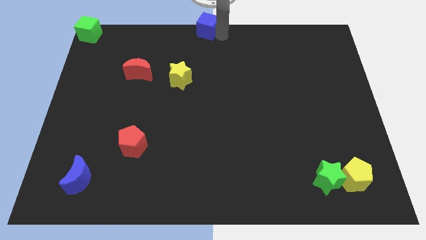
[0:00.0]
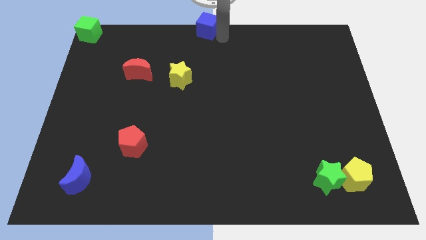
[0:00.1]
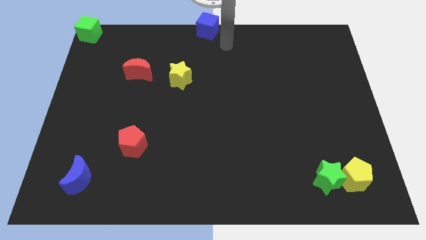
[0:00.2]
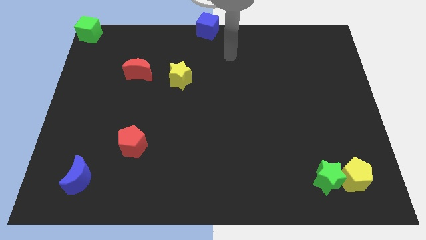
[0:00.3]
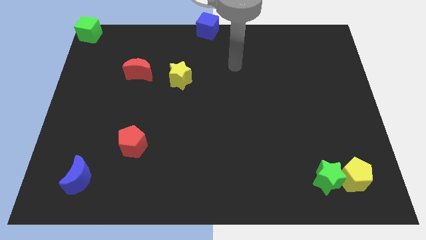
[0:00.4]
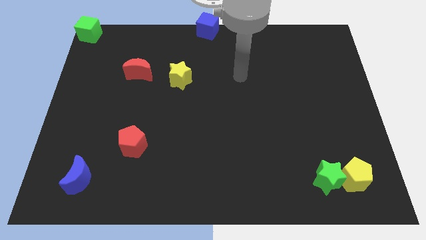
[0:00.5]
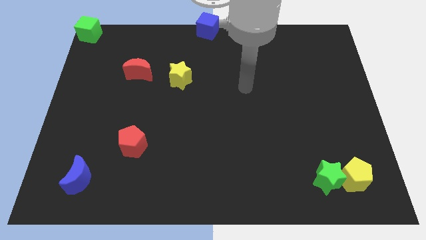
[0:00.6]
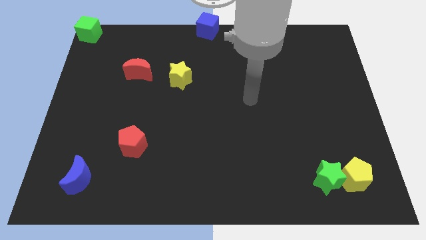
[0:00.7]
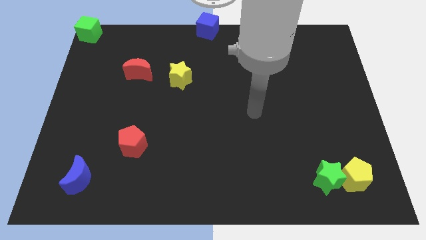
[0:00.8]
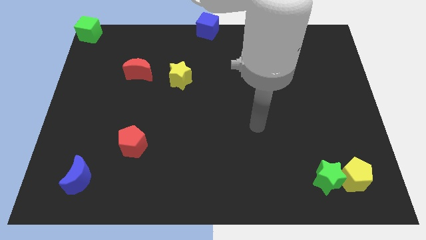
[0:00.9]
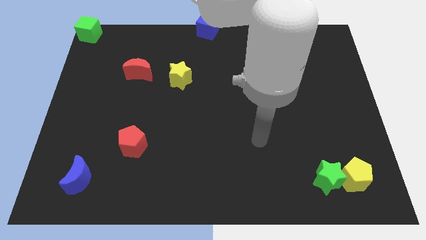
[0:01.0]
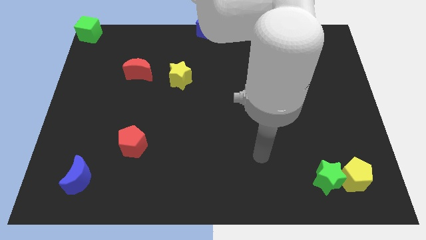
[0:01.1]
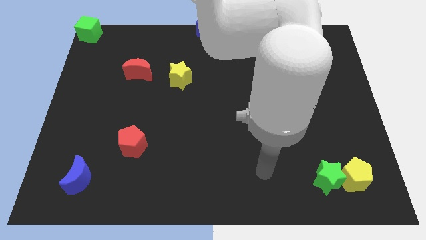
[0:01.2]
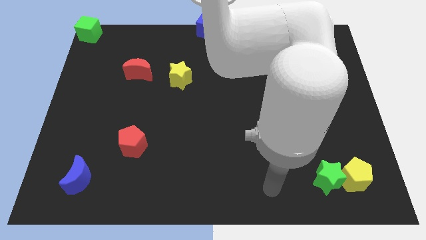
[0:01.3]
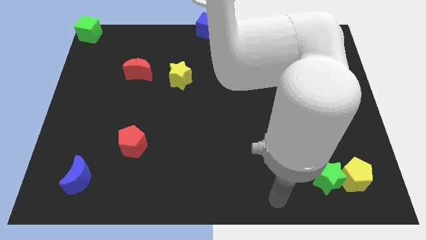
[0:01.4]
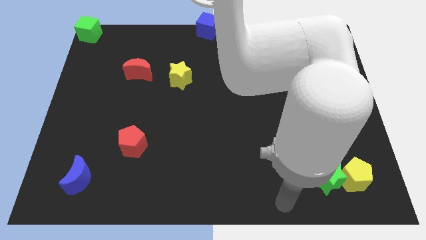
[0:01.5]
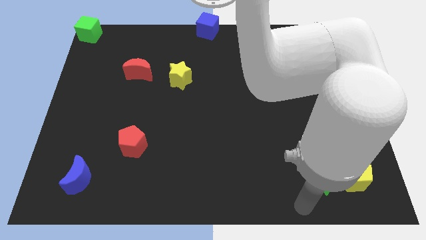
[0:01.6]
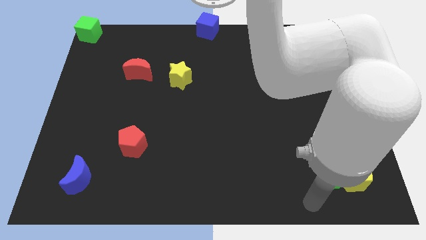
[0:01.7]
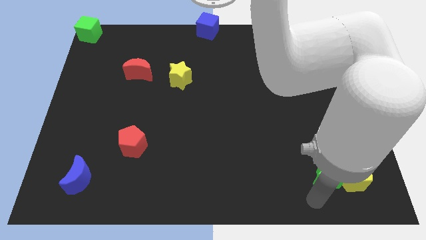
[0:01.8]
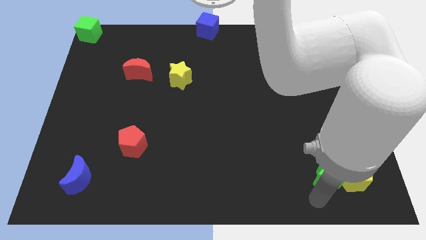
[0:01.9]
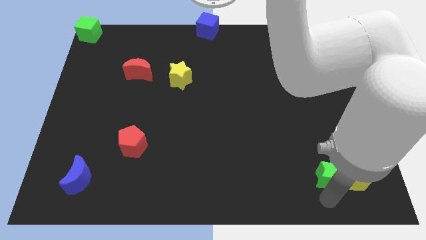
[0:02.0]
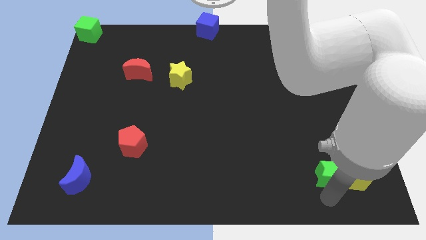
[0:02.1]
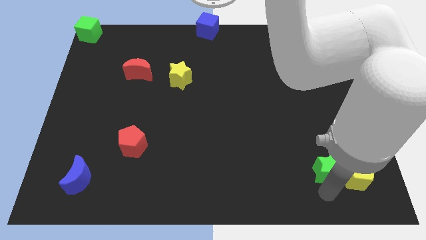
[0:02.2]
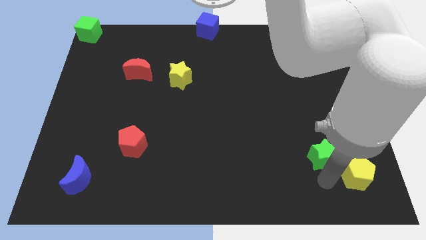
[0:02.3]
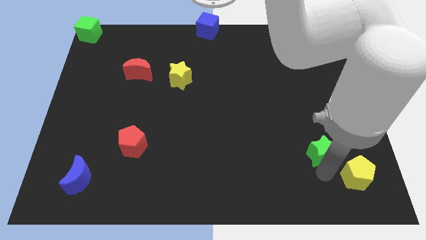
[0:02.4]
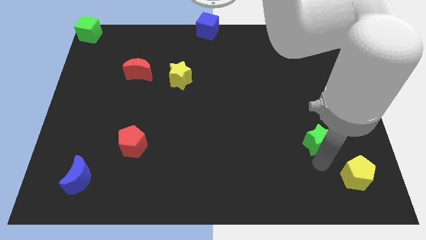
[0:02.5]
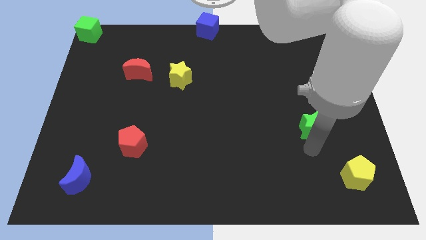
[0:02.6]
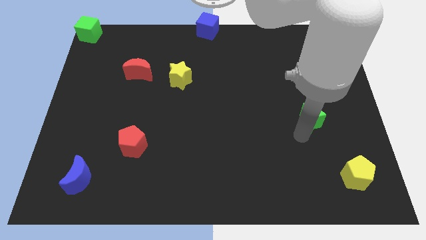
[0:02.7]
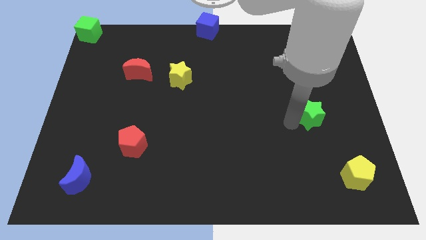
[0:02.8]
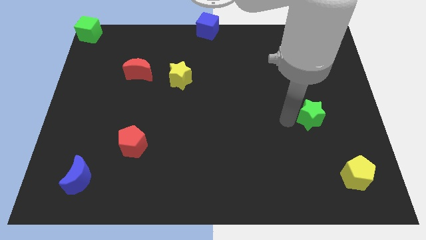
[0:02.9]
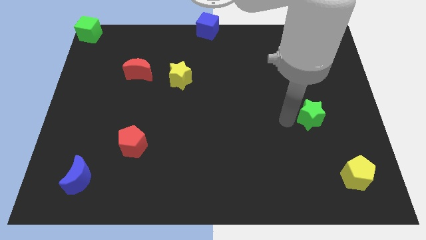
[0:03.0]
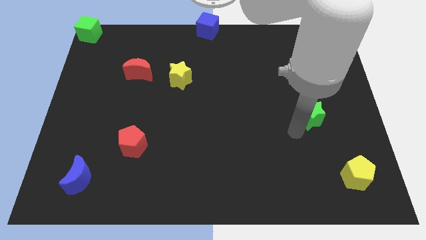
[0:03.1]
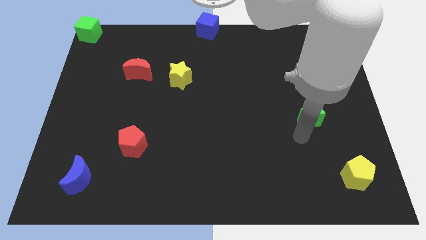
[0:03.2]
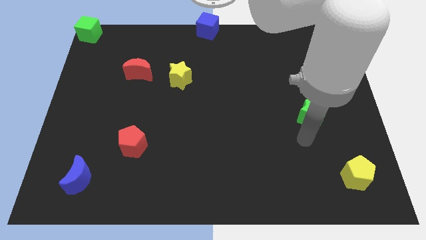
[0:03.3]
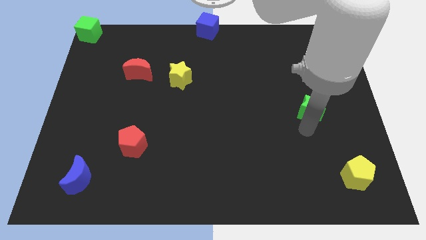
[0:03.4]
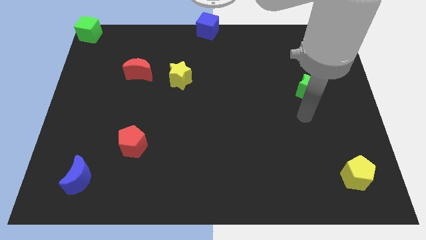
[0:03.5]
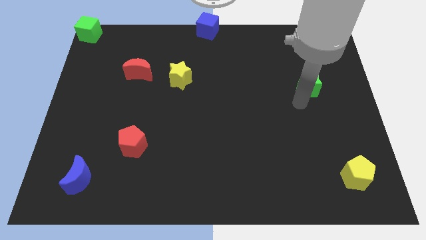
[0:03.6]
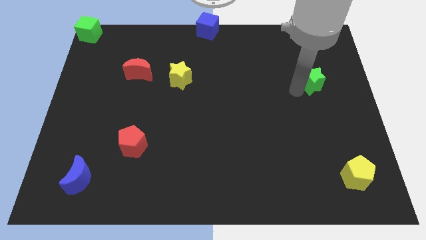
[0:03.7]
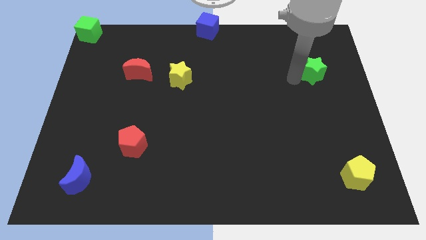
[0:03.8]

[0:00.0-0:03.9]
move green star towards vertically

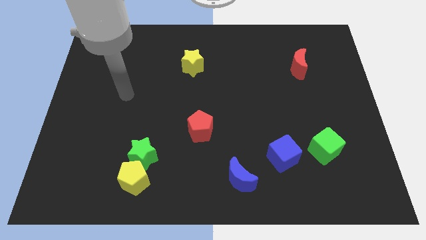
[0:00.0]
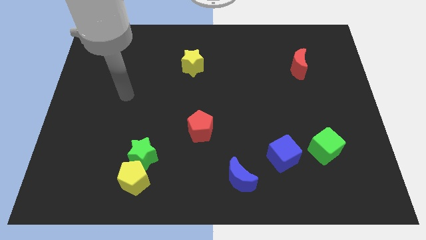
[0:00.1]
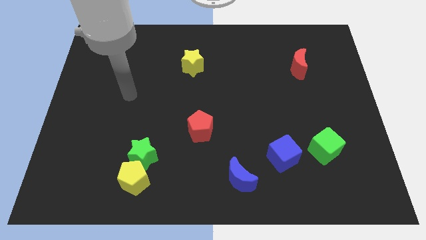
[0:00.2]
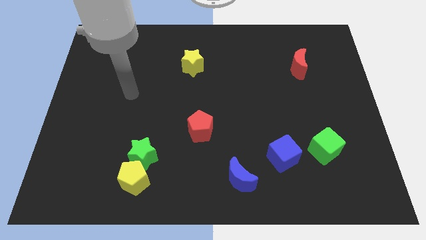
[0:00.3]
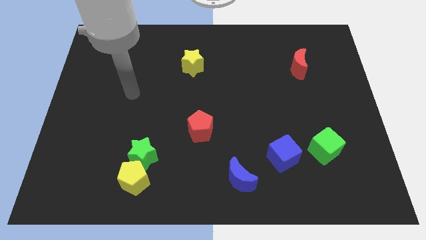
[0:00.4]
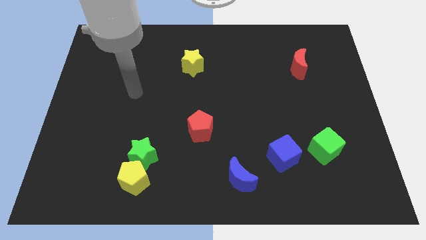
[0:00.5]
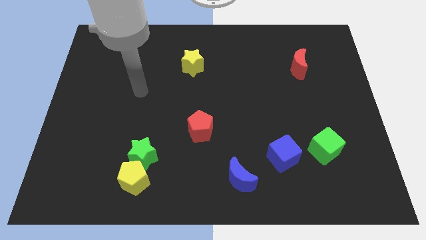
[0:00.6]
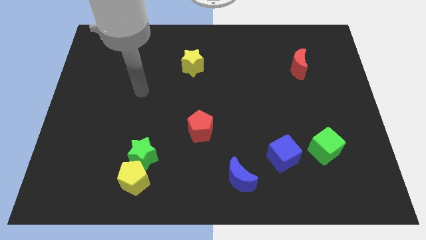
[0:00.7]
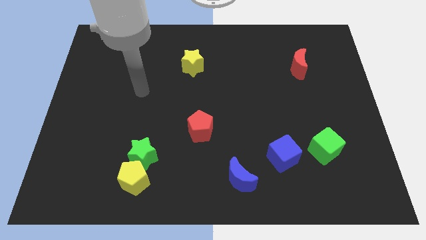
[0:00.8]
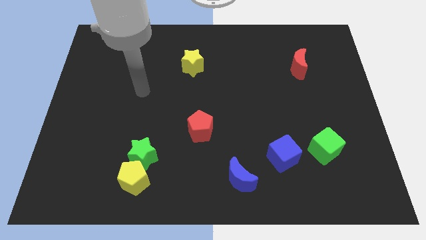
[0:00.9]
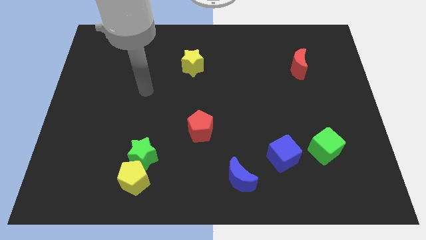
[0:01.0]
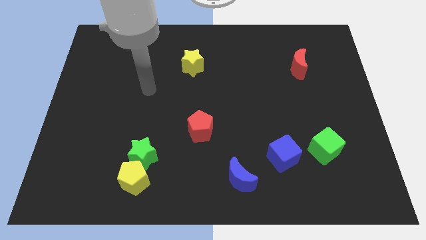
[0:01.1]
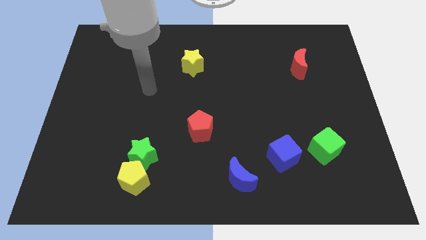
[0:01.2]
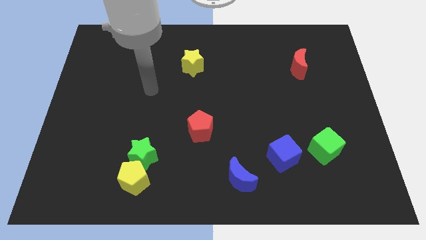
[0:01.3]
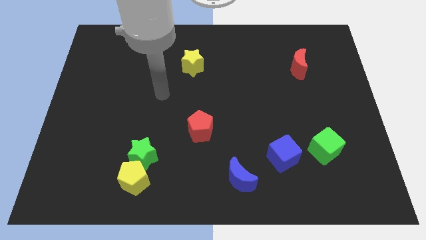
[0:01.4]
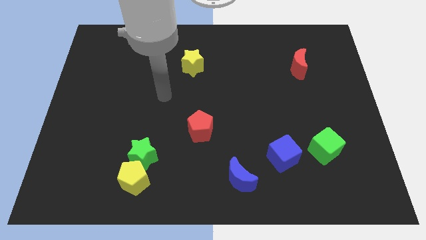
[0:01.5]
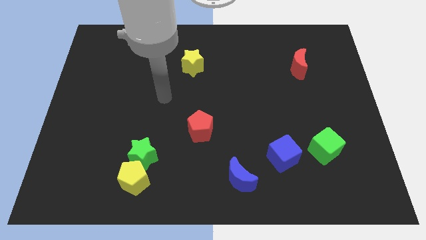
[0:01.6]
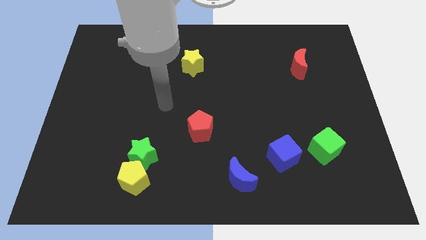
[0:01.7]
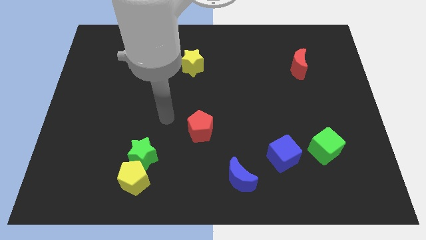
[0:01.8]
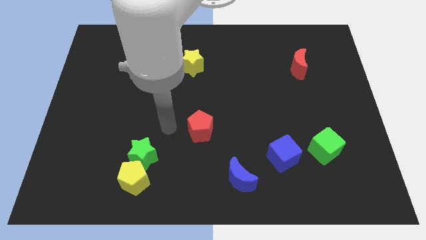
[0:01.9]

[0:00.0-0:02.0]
place your arm to the left side of the red pentagon

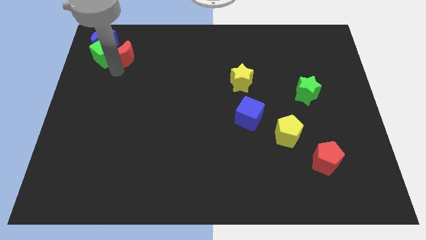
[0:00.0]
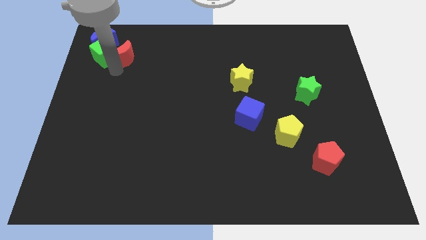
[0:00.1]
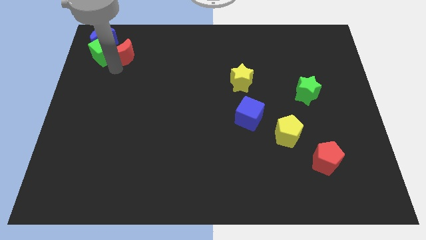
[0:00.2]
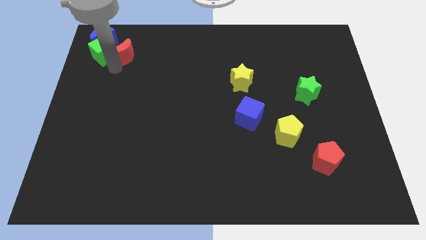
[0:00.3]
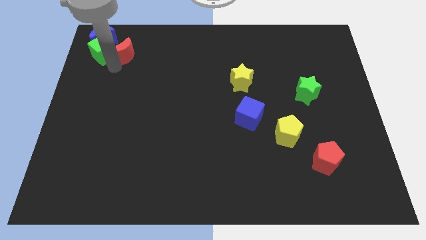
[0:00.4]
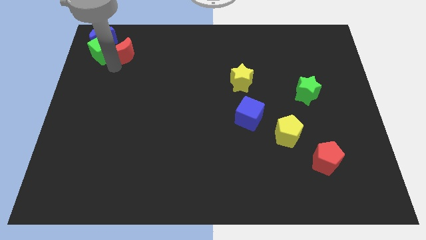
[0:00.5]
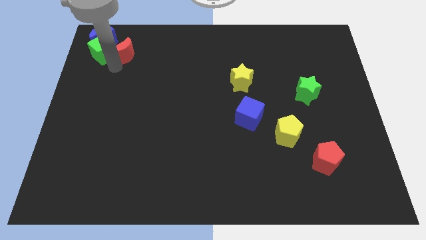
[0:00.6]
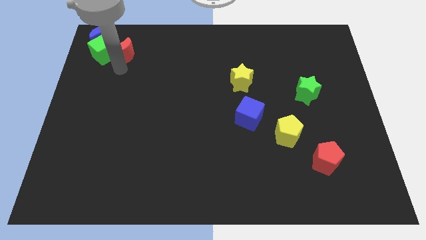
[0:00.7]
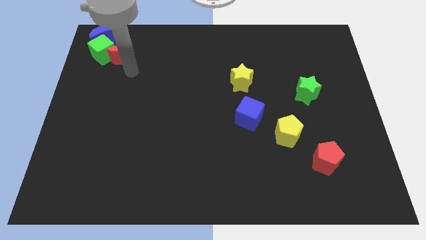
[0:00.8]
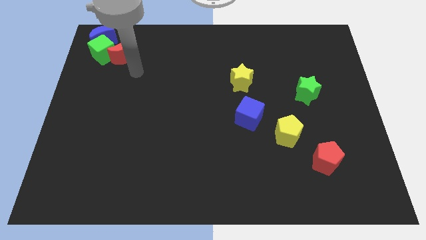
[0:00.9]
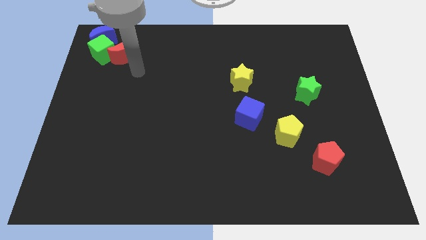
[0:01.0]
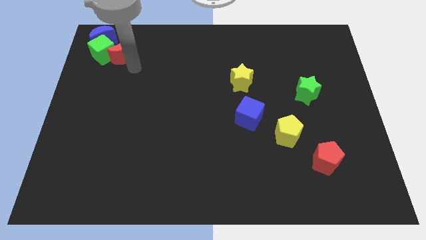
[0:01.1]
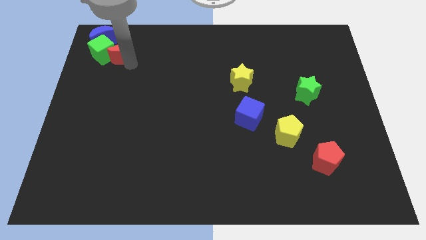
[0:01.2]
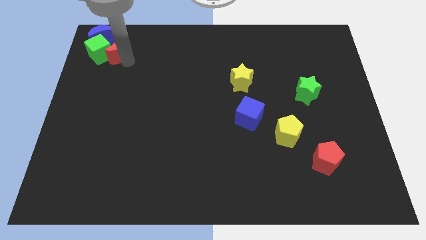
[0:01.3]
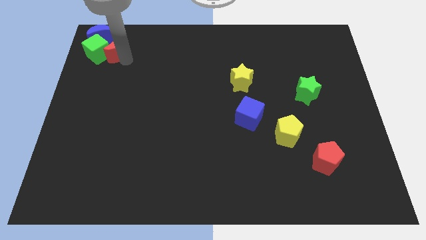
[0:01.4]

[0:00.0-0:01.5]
push the blue moon and green cube slightly with red moon to the top left of the board

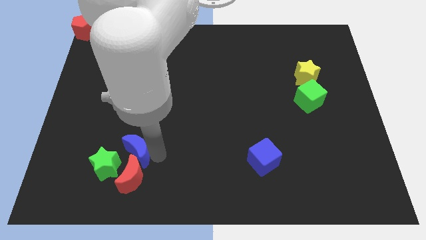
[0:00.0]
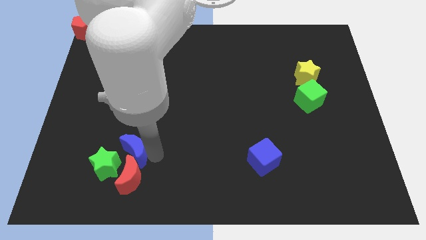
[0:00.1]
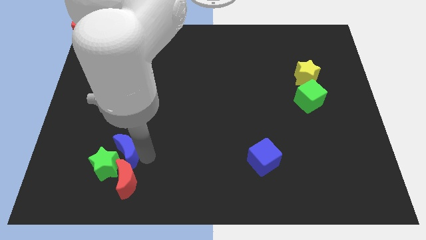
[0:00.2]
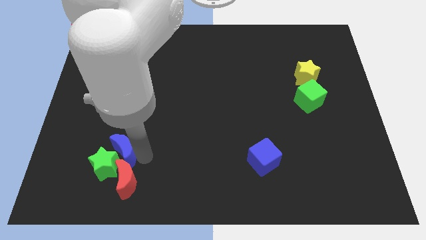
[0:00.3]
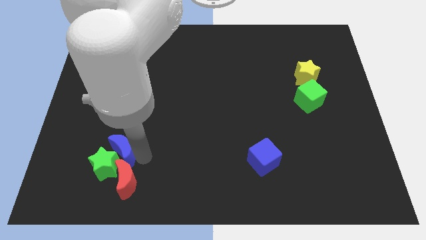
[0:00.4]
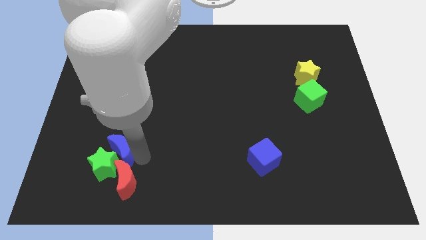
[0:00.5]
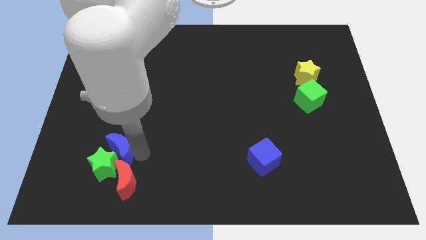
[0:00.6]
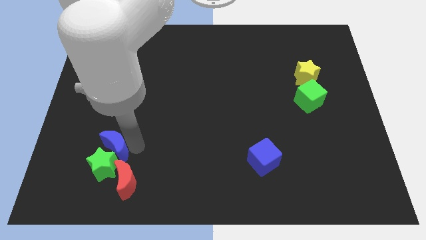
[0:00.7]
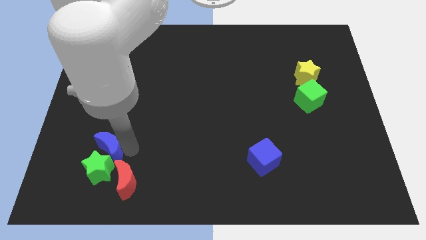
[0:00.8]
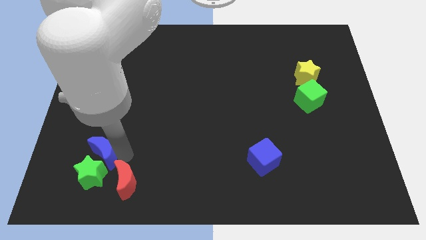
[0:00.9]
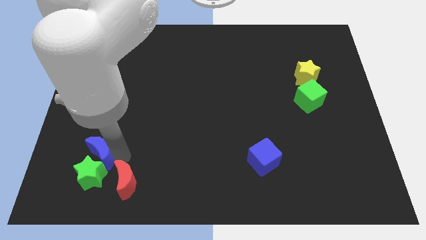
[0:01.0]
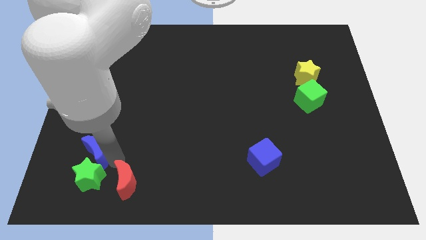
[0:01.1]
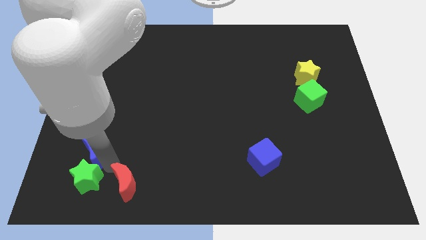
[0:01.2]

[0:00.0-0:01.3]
move the blue crescent to the top of the green star

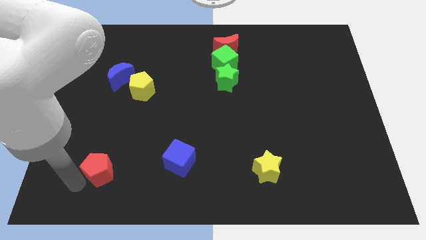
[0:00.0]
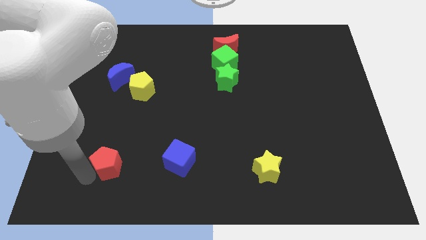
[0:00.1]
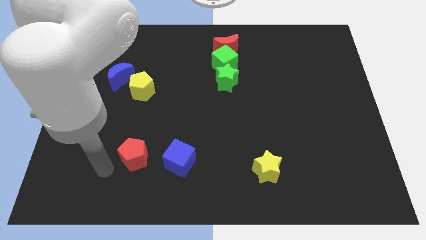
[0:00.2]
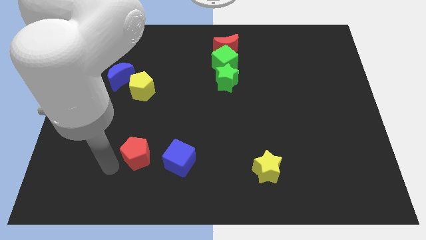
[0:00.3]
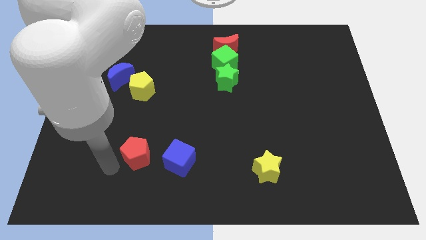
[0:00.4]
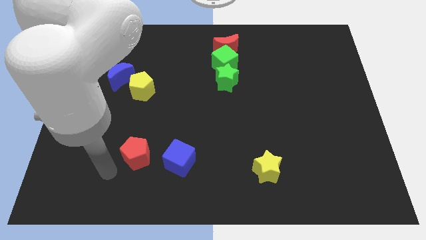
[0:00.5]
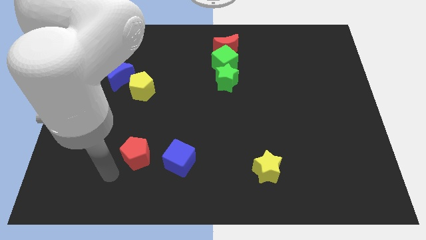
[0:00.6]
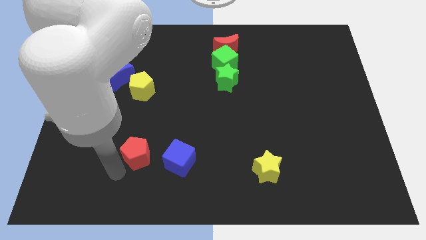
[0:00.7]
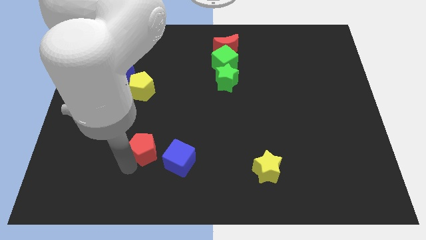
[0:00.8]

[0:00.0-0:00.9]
push the red pentagon to the left of the blue cube
